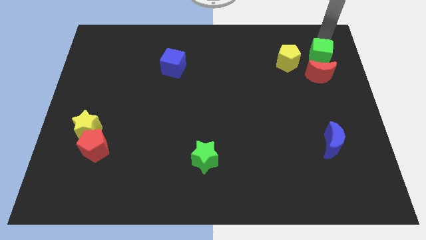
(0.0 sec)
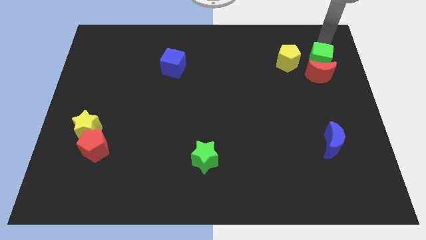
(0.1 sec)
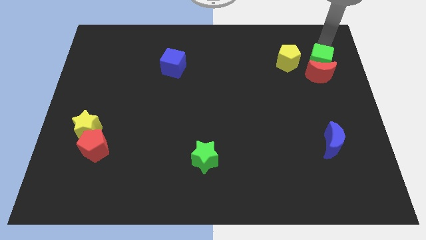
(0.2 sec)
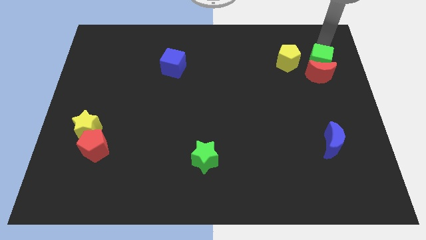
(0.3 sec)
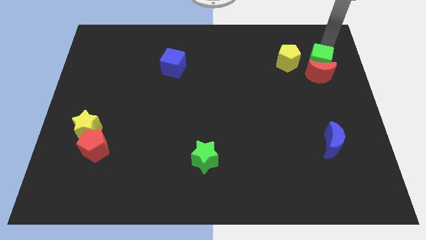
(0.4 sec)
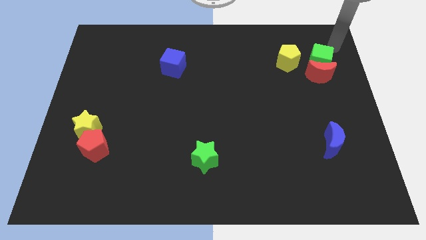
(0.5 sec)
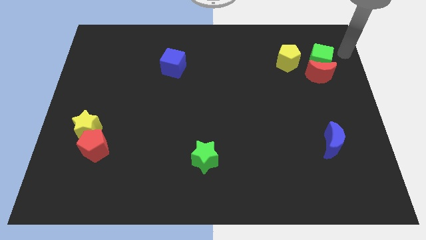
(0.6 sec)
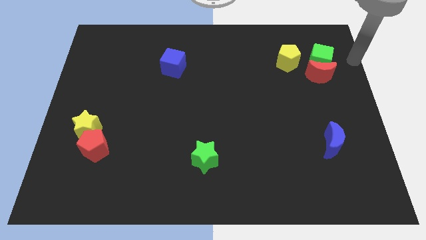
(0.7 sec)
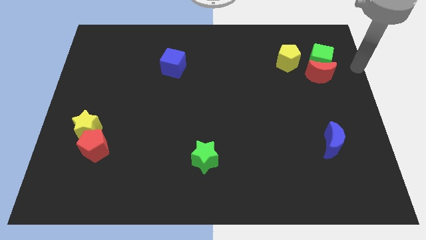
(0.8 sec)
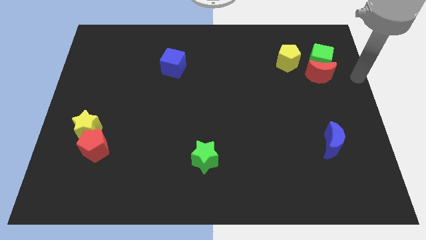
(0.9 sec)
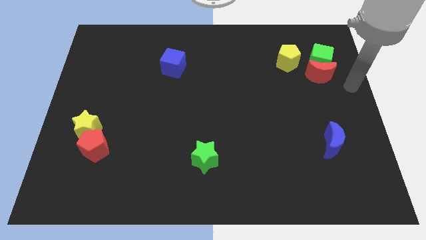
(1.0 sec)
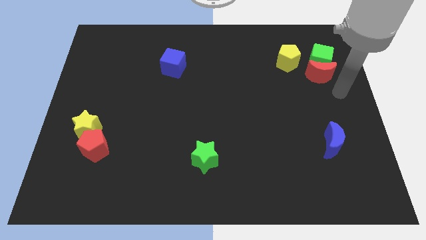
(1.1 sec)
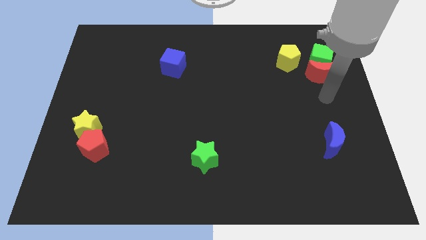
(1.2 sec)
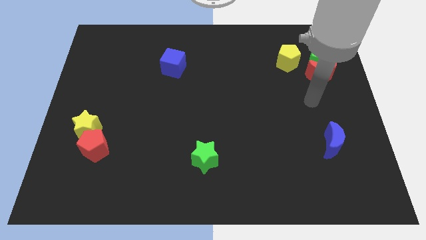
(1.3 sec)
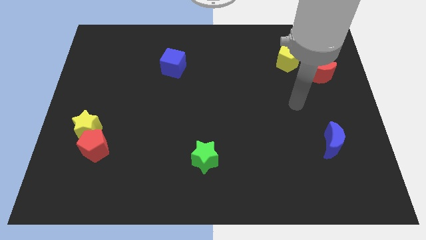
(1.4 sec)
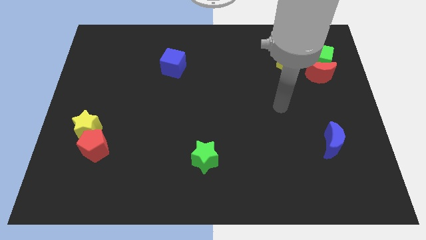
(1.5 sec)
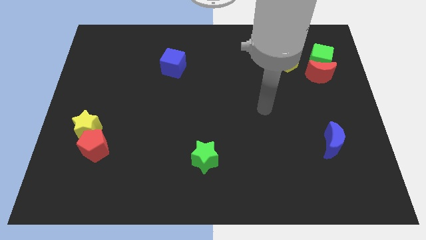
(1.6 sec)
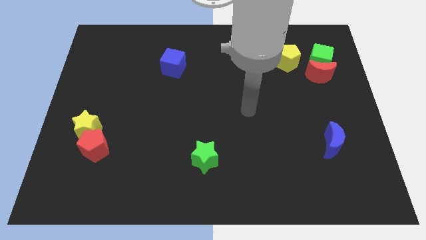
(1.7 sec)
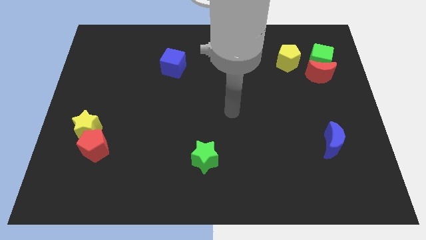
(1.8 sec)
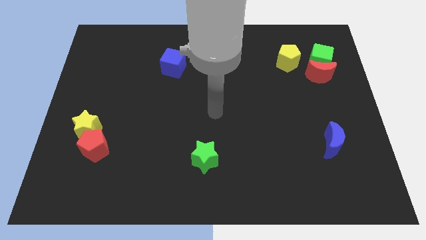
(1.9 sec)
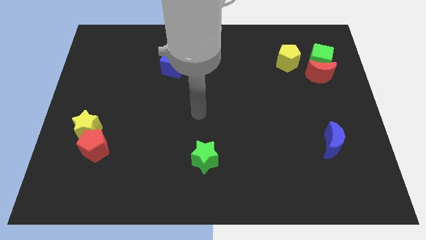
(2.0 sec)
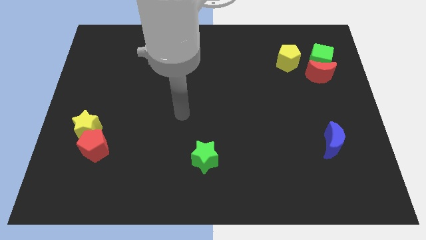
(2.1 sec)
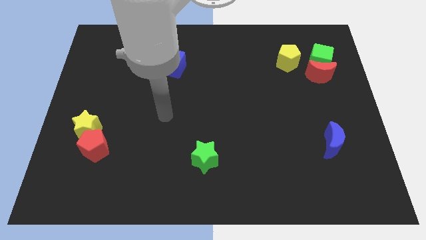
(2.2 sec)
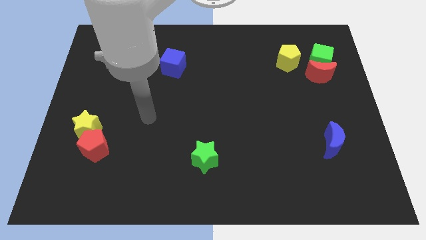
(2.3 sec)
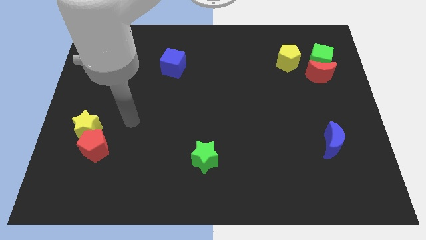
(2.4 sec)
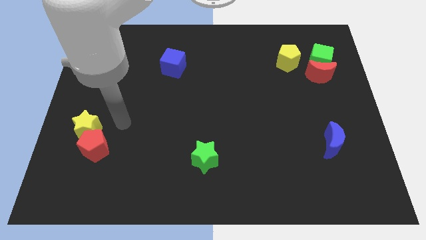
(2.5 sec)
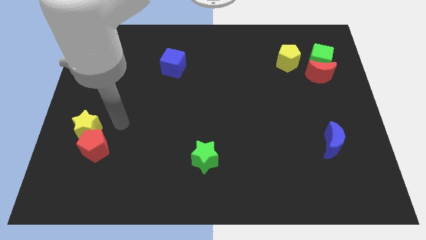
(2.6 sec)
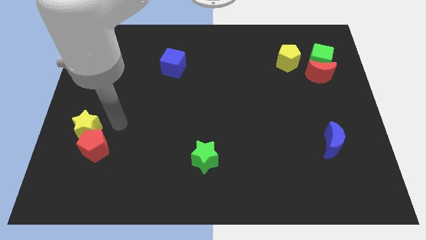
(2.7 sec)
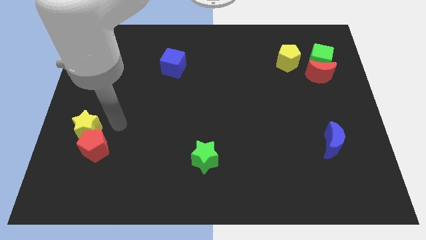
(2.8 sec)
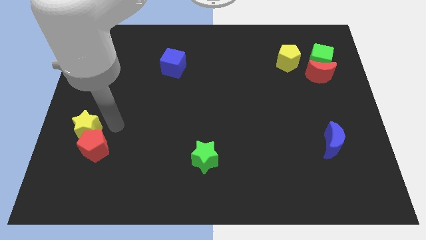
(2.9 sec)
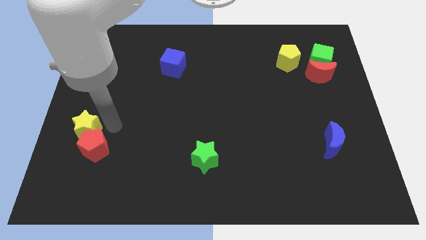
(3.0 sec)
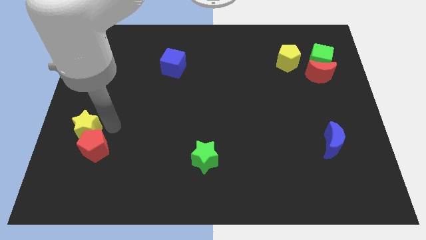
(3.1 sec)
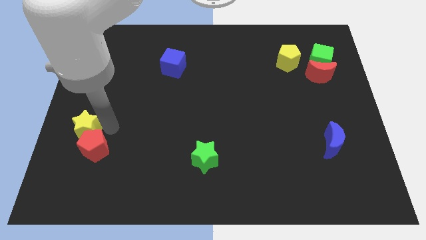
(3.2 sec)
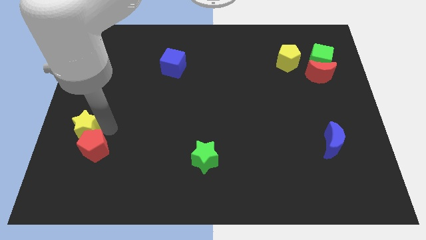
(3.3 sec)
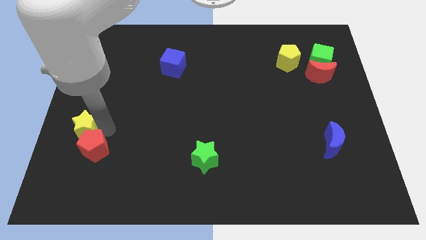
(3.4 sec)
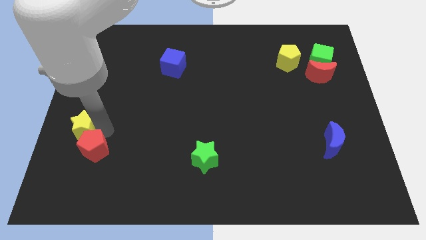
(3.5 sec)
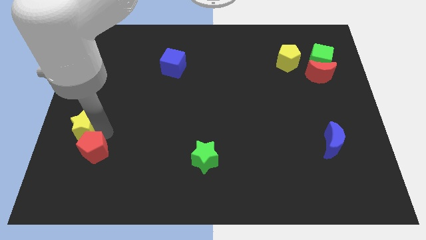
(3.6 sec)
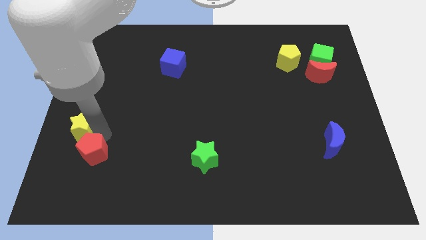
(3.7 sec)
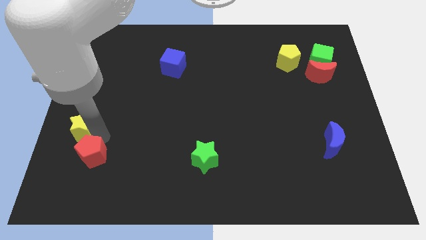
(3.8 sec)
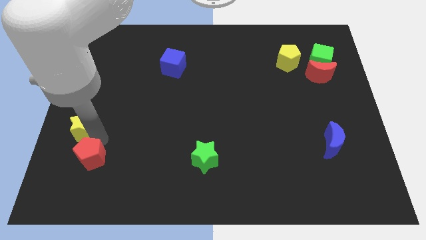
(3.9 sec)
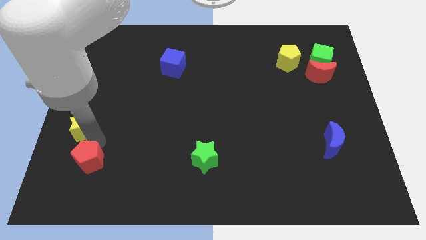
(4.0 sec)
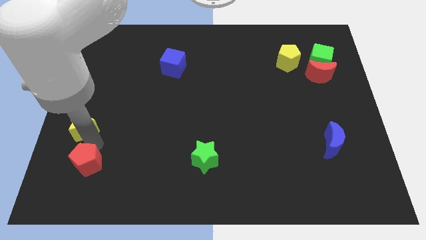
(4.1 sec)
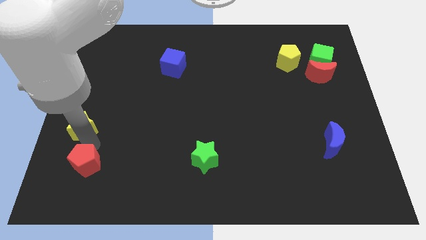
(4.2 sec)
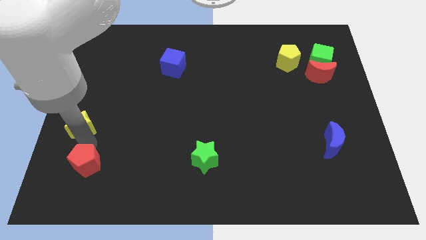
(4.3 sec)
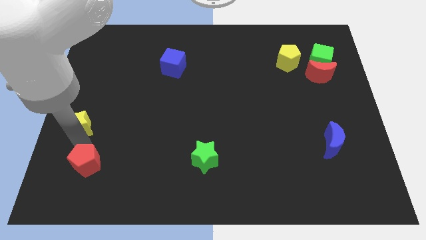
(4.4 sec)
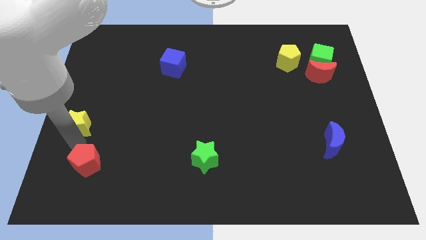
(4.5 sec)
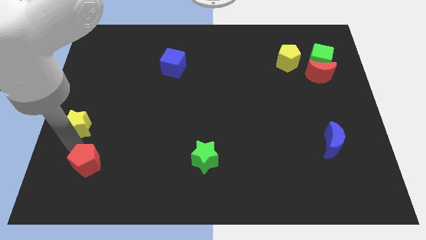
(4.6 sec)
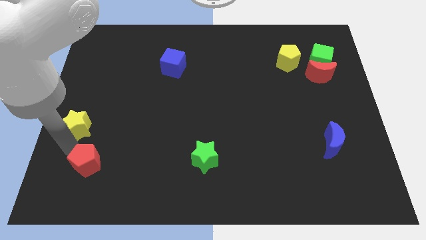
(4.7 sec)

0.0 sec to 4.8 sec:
separate the yellow star and red pentagon

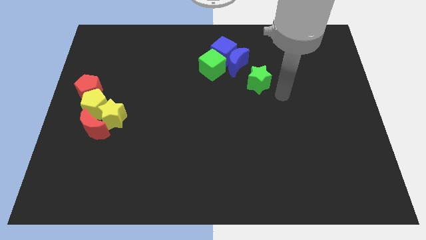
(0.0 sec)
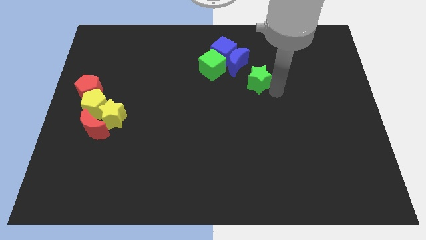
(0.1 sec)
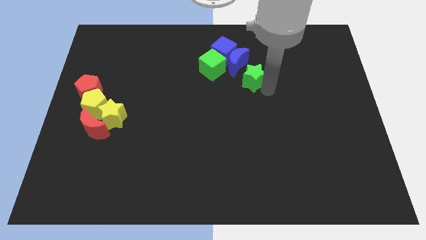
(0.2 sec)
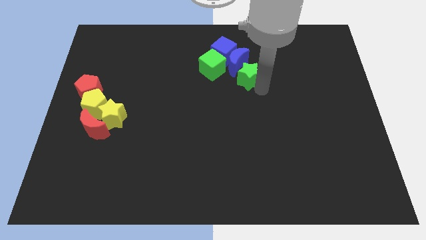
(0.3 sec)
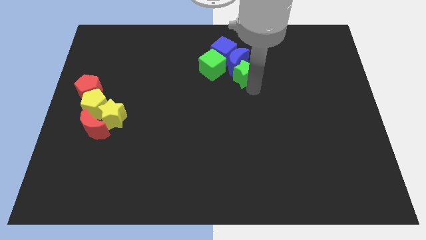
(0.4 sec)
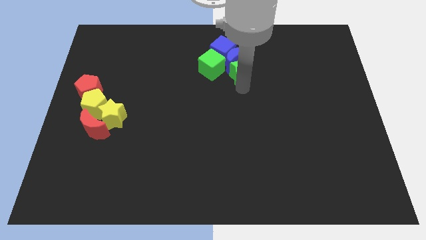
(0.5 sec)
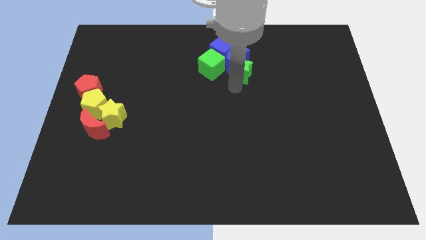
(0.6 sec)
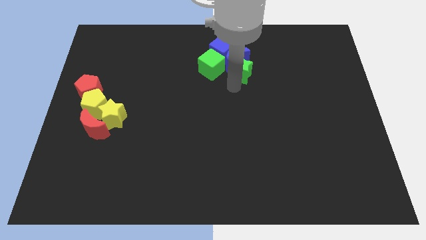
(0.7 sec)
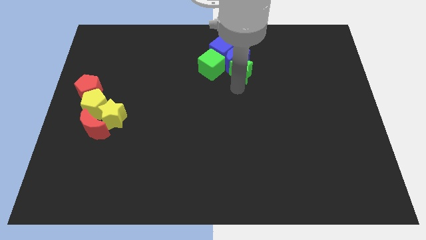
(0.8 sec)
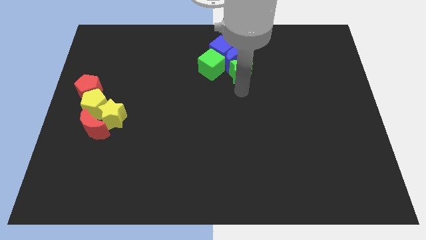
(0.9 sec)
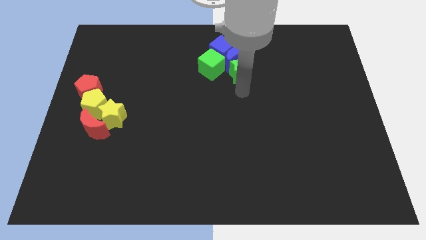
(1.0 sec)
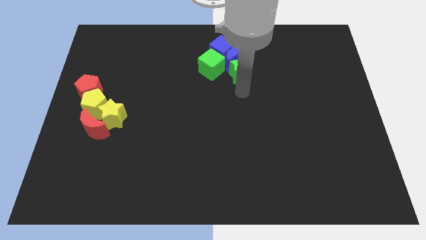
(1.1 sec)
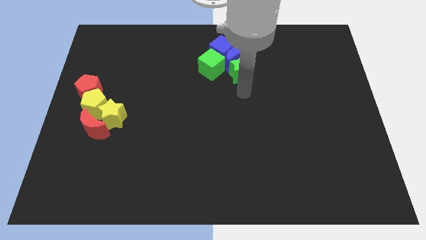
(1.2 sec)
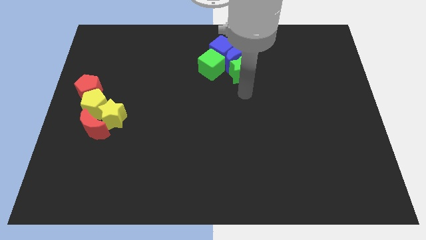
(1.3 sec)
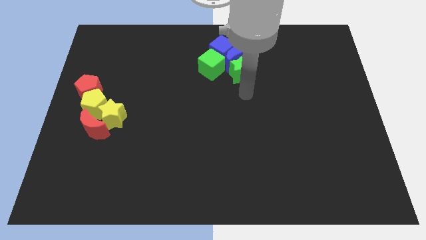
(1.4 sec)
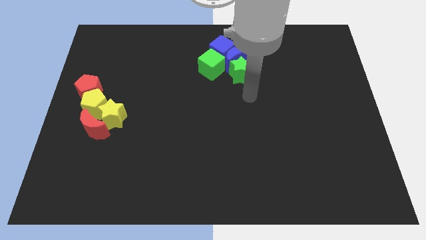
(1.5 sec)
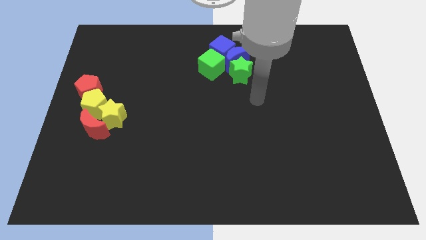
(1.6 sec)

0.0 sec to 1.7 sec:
push the green star into the blue crescent

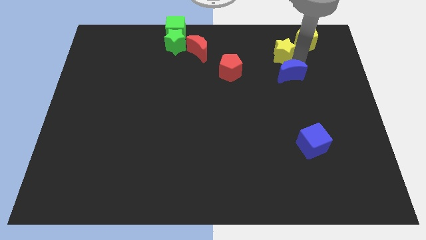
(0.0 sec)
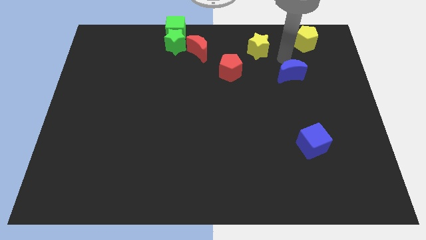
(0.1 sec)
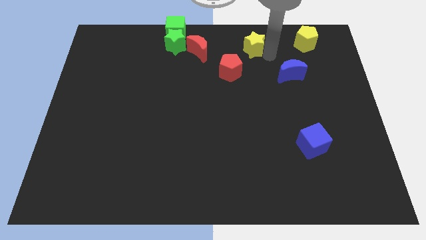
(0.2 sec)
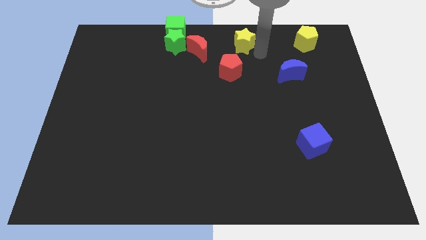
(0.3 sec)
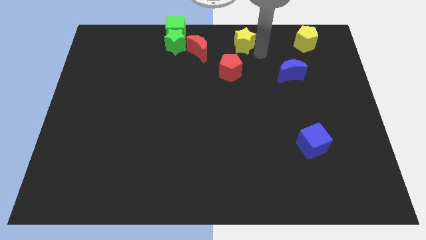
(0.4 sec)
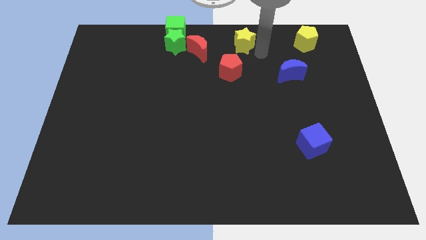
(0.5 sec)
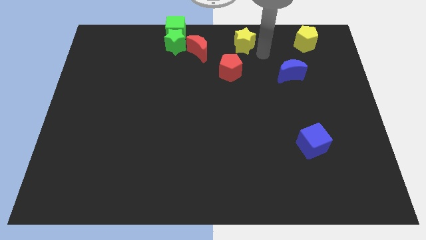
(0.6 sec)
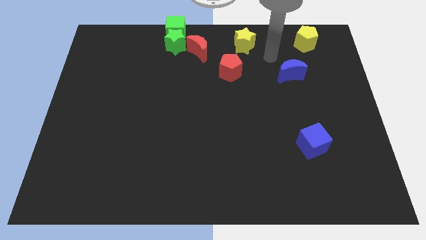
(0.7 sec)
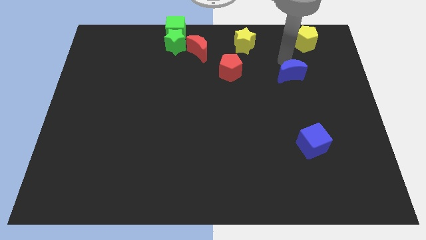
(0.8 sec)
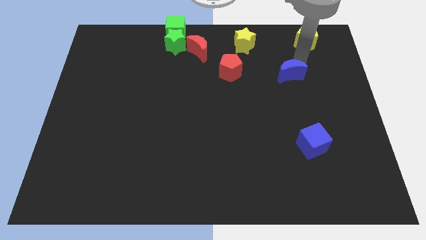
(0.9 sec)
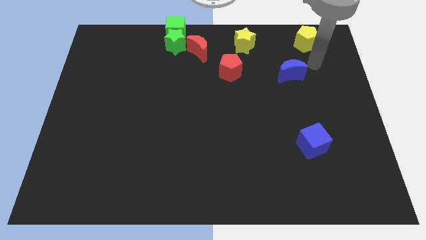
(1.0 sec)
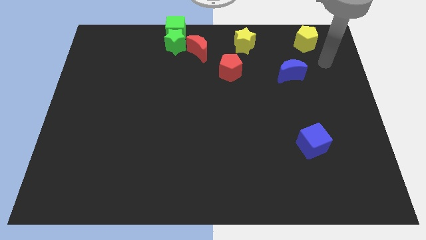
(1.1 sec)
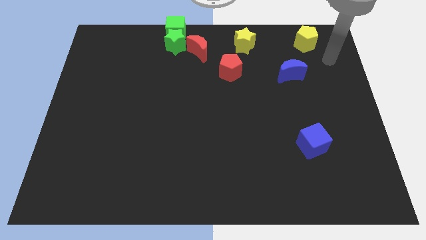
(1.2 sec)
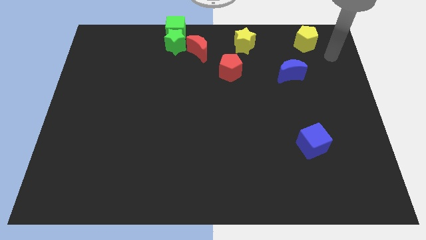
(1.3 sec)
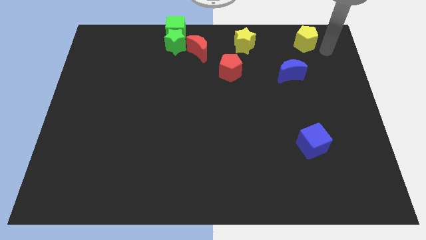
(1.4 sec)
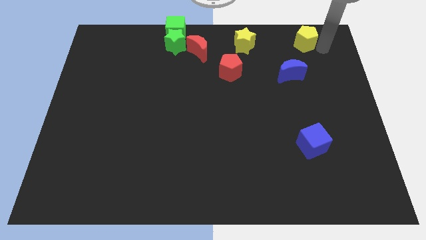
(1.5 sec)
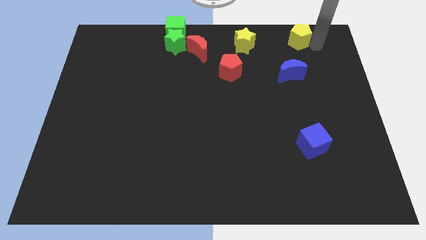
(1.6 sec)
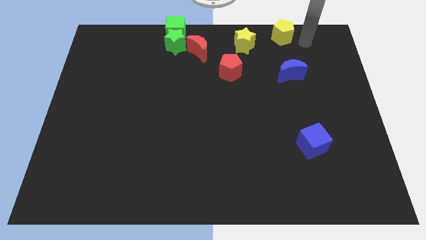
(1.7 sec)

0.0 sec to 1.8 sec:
move the yellow star away from the blue moon

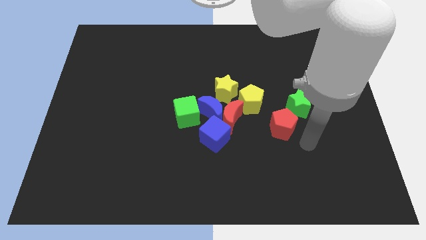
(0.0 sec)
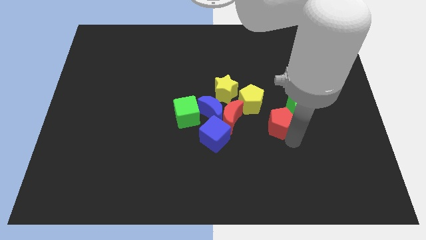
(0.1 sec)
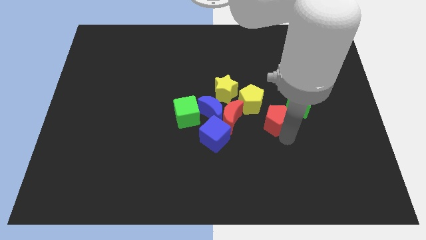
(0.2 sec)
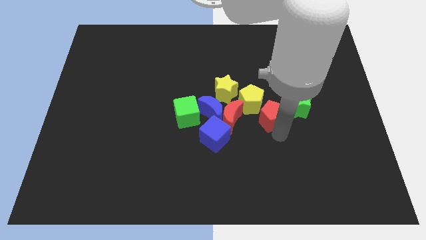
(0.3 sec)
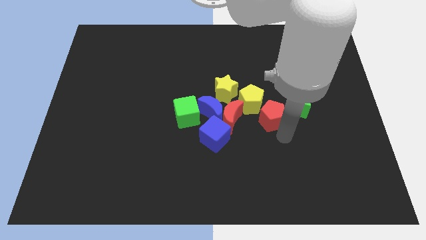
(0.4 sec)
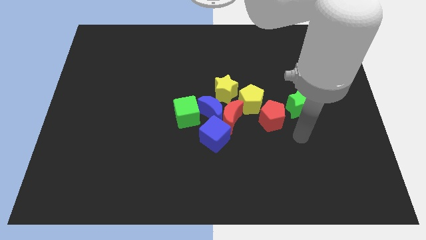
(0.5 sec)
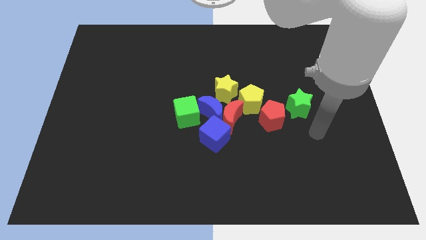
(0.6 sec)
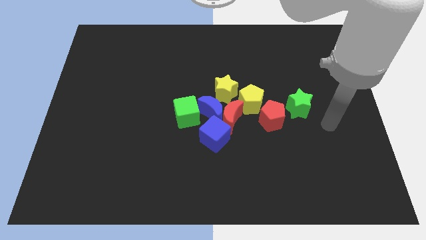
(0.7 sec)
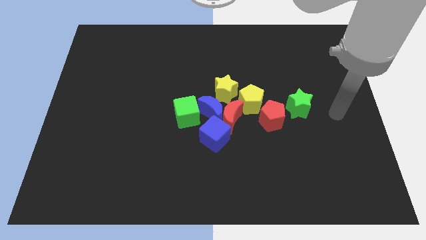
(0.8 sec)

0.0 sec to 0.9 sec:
move the red pentagon below the yellow pentagon
